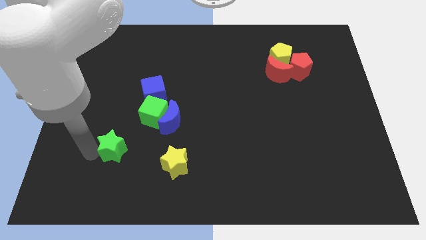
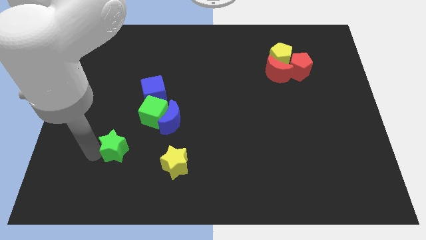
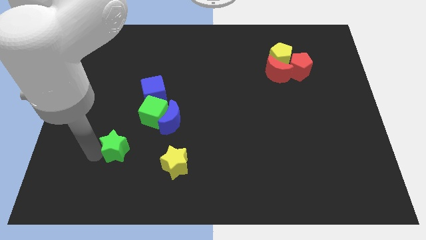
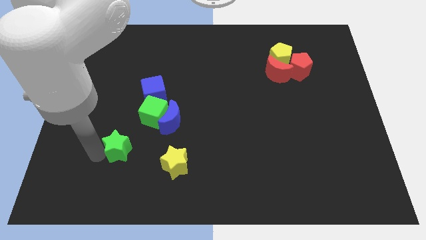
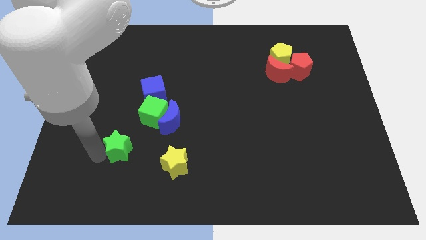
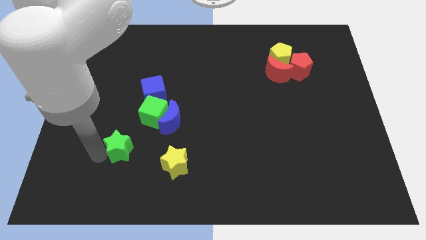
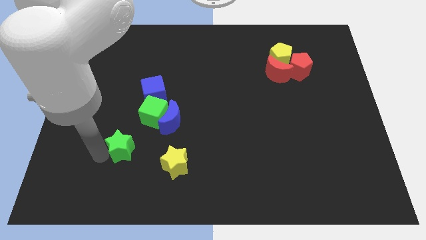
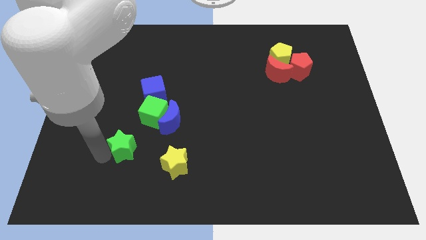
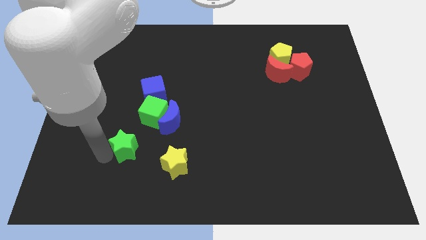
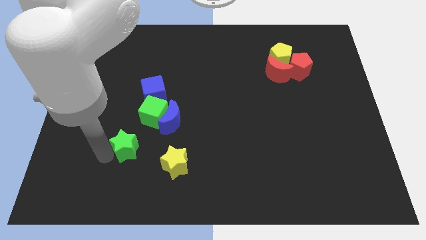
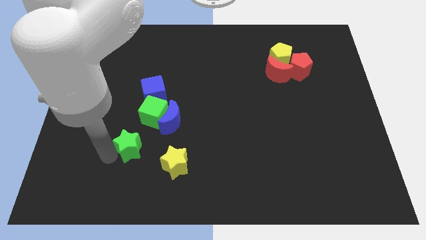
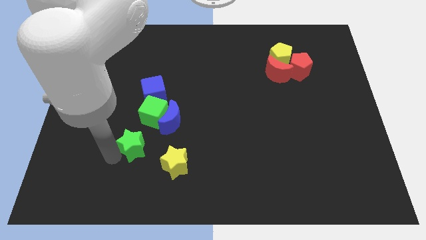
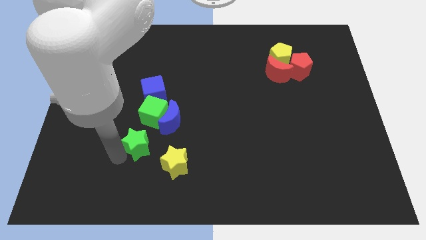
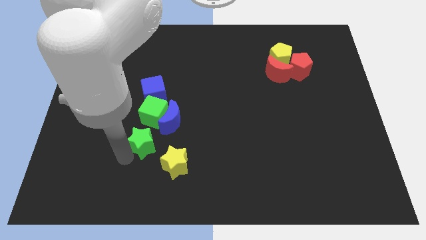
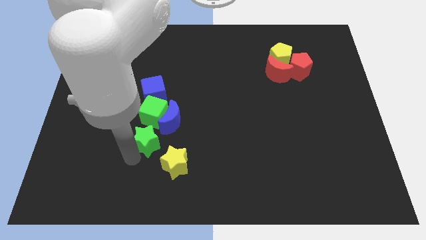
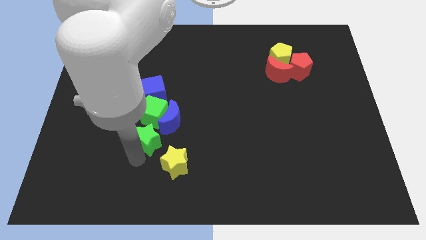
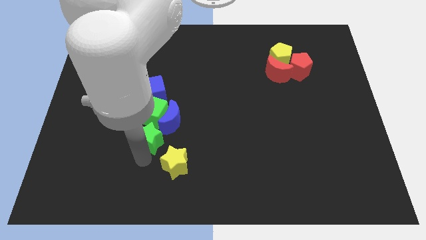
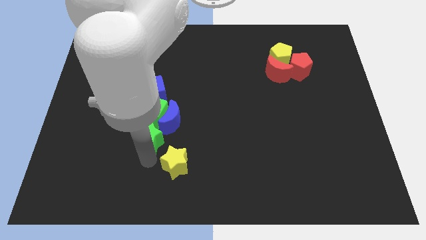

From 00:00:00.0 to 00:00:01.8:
push the green star towards the bottom of green cube

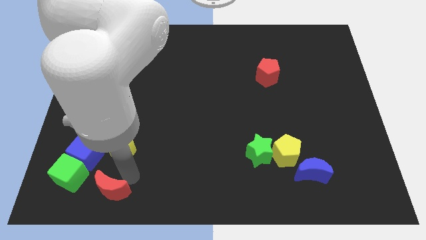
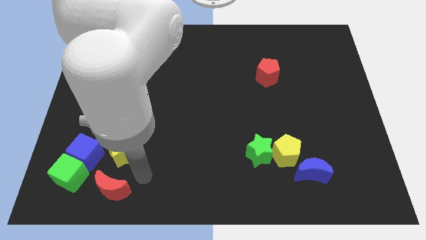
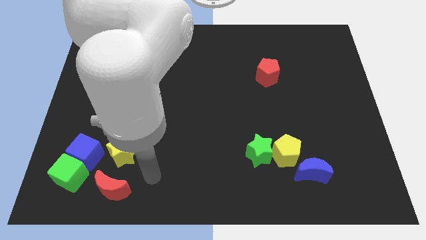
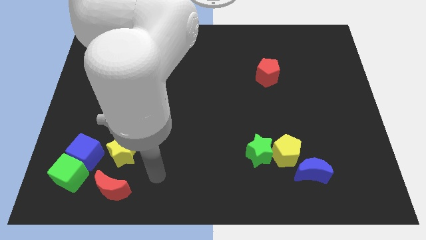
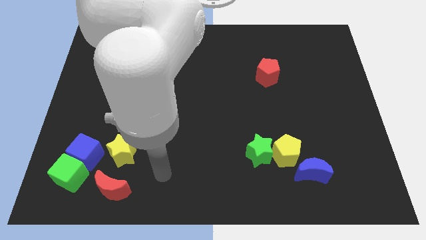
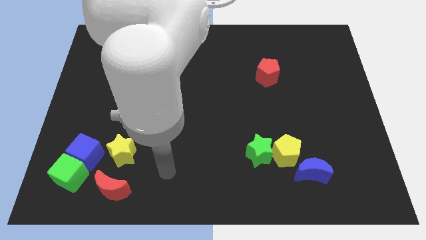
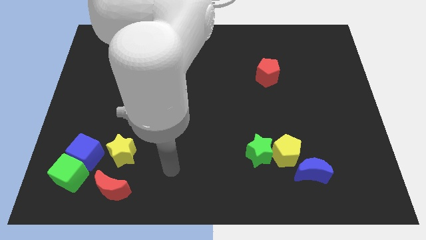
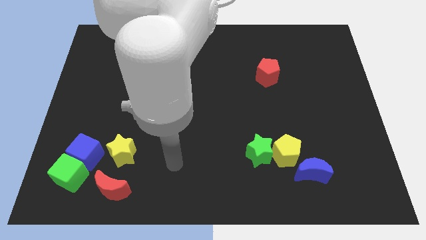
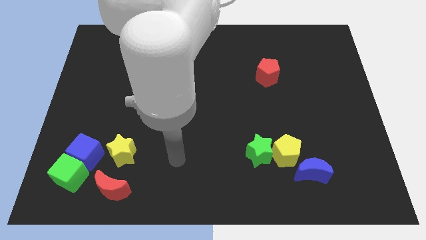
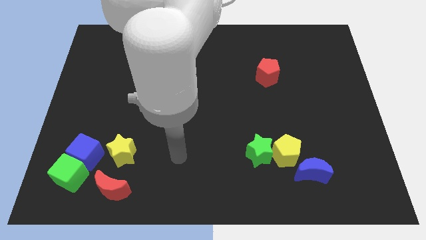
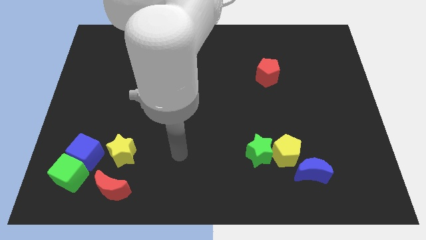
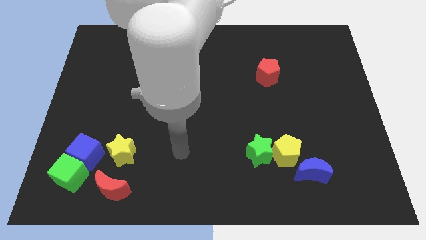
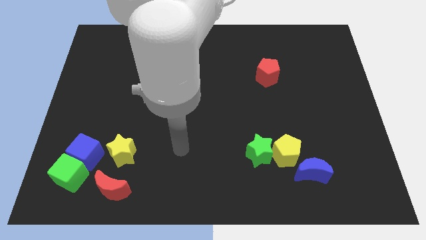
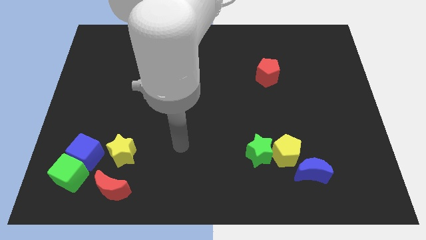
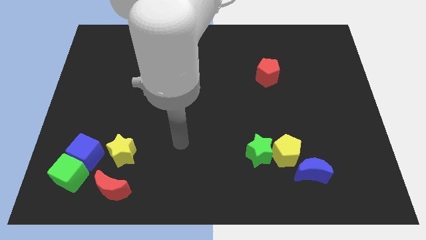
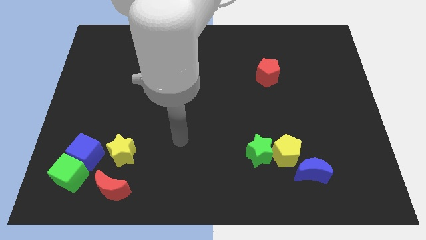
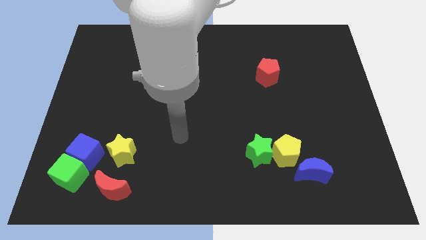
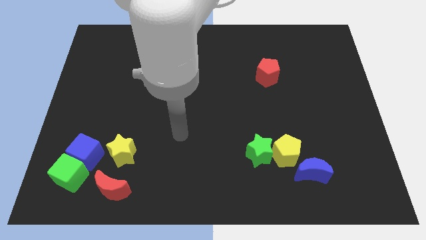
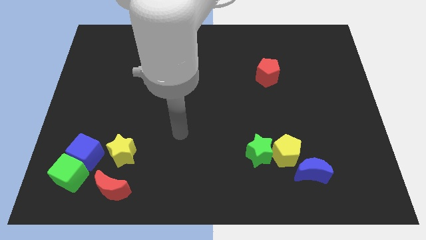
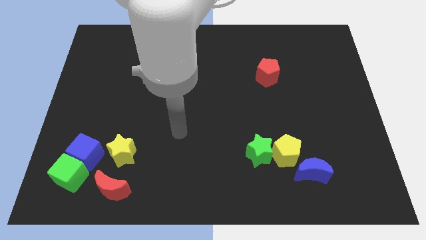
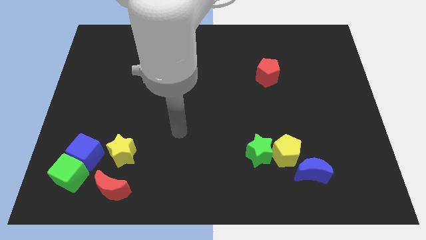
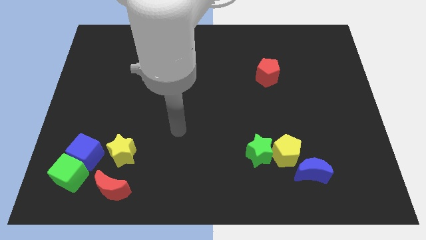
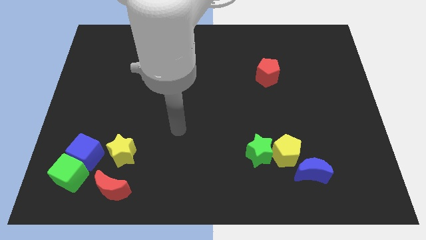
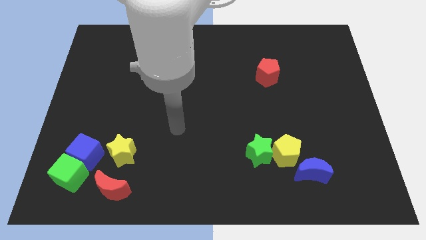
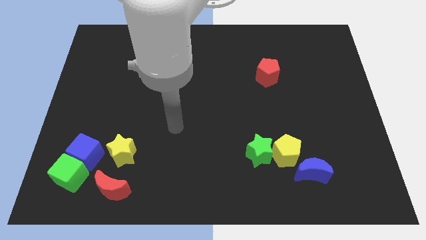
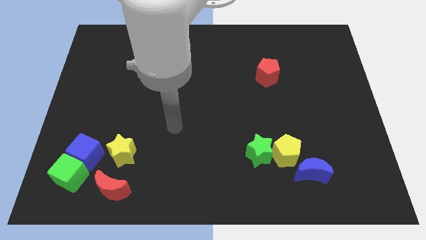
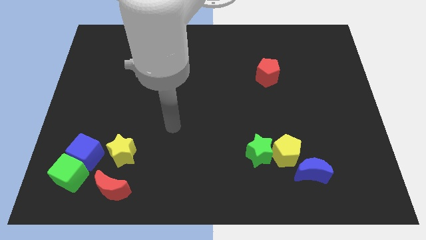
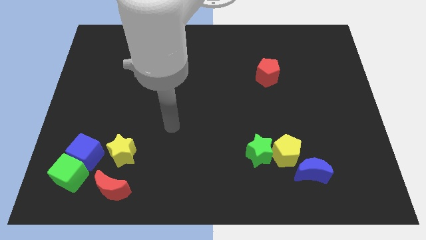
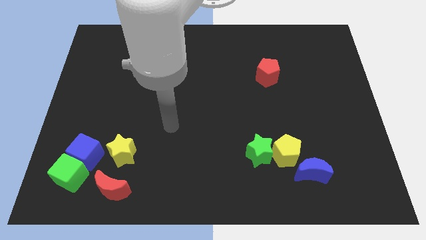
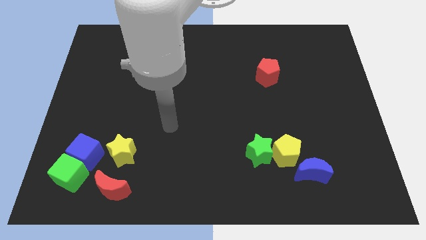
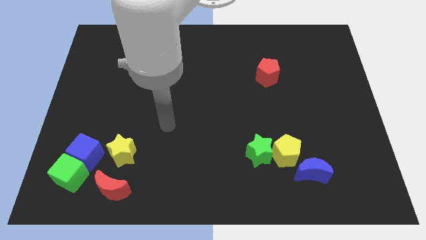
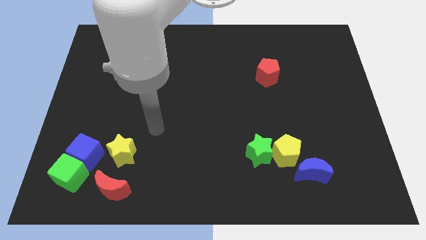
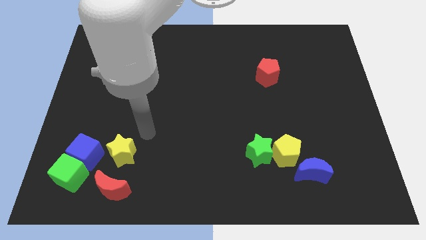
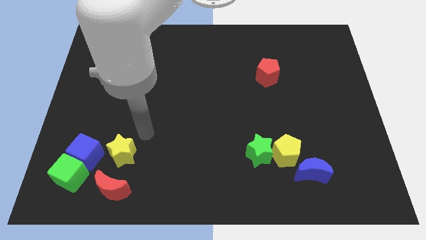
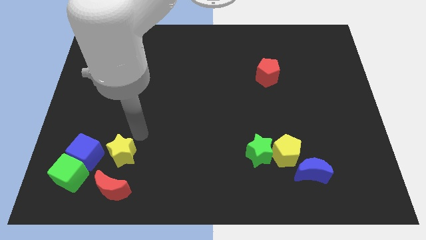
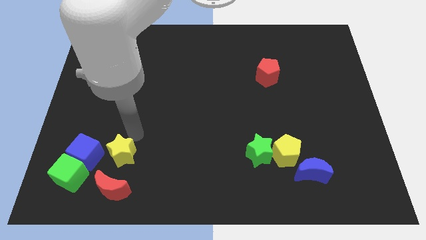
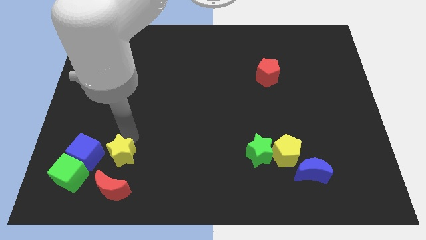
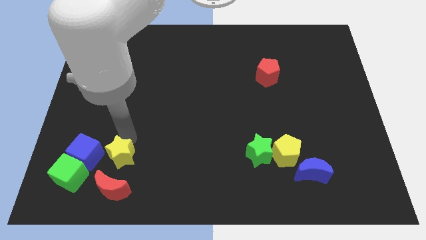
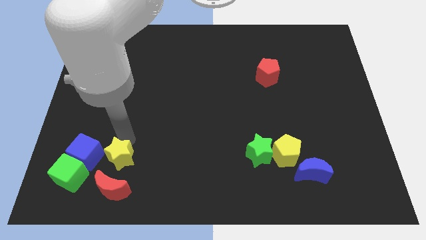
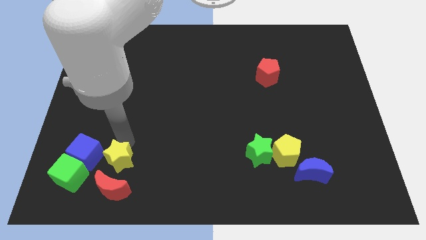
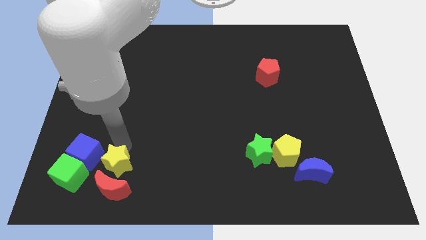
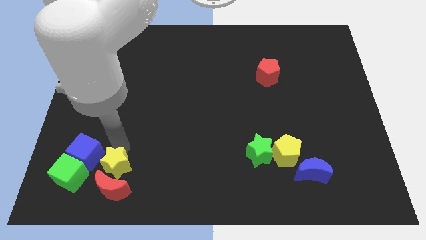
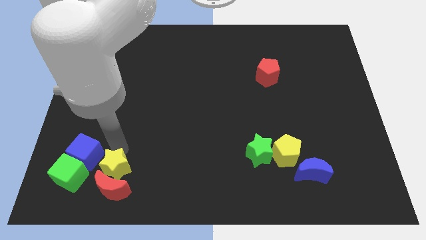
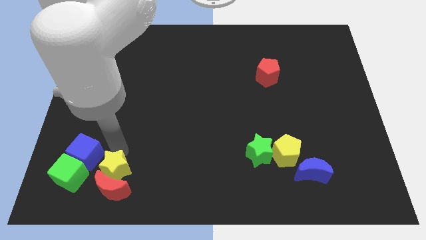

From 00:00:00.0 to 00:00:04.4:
push the yellow star into the red crescent

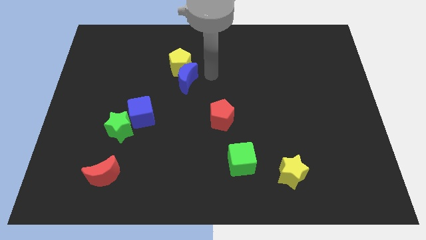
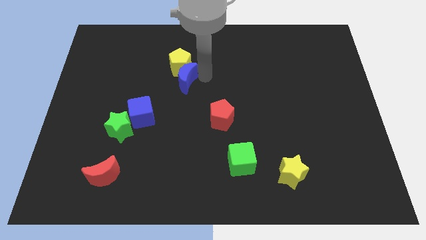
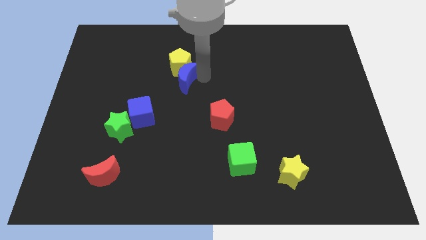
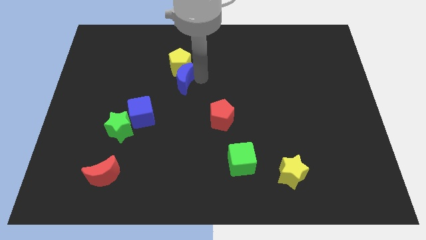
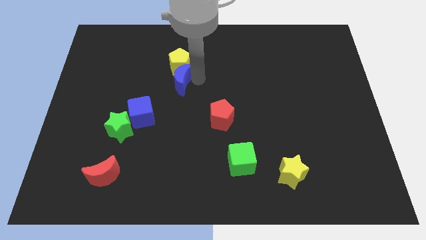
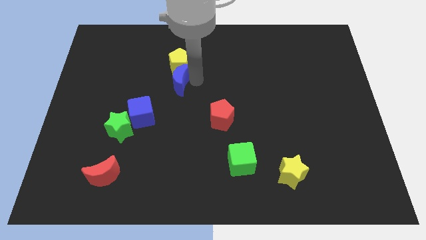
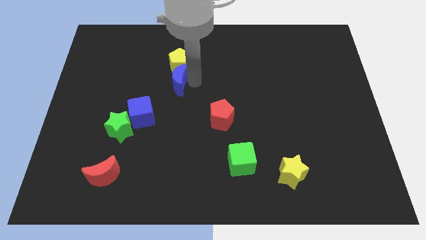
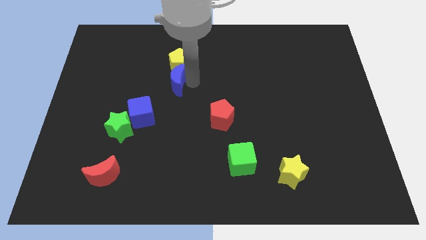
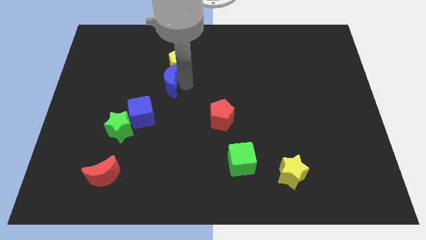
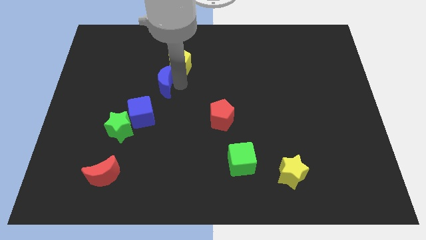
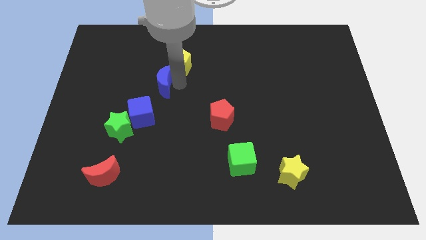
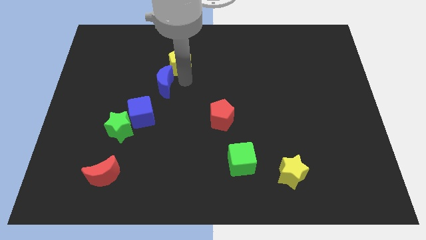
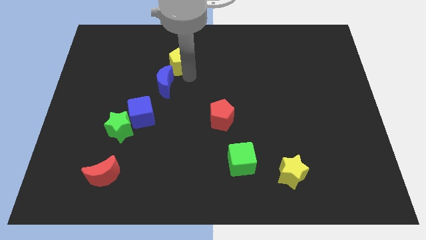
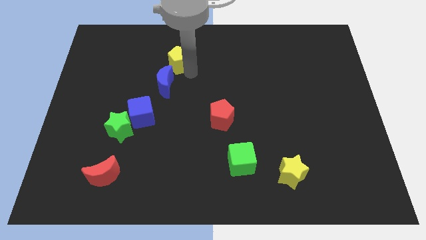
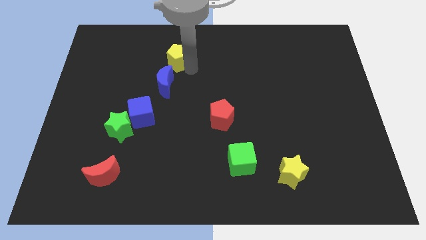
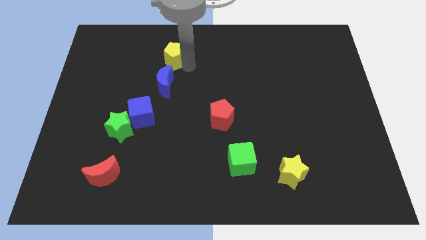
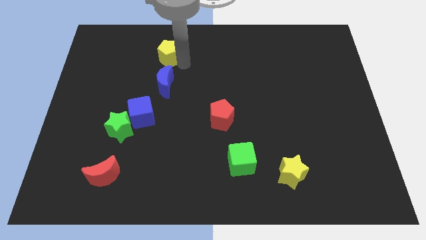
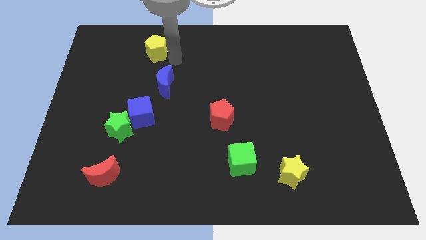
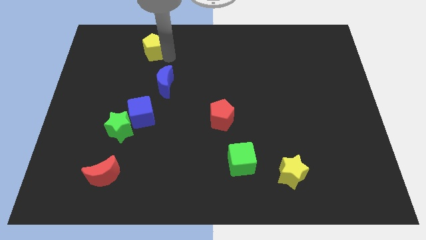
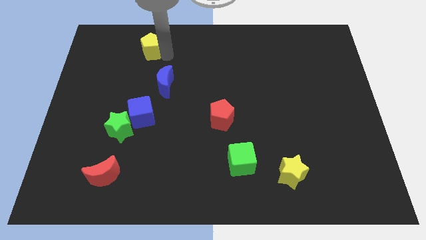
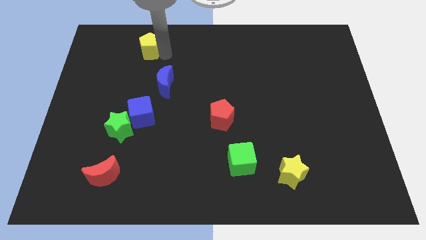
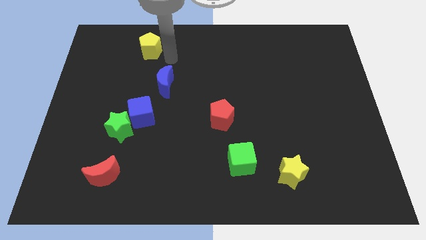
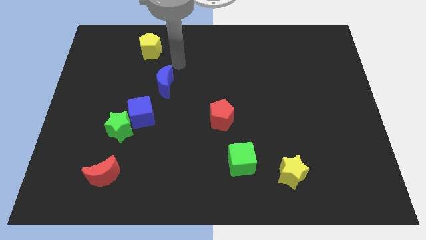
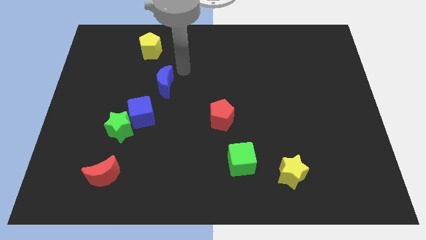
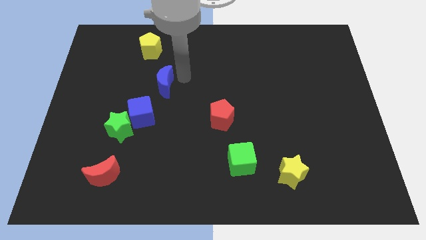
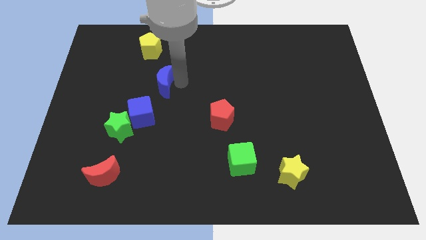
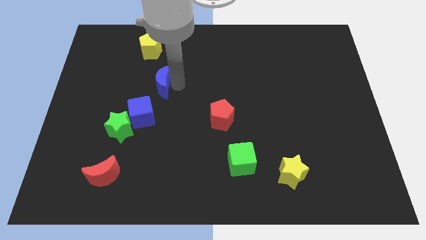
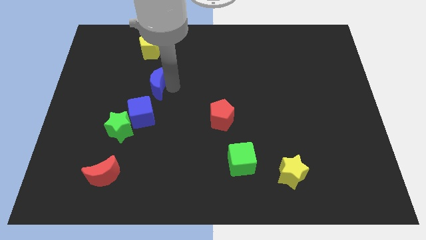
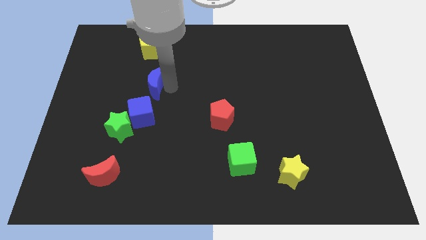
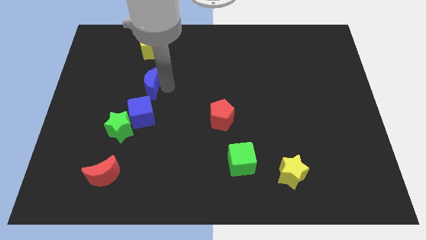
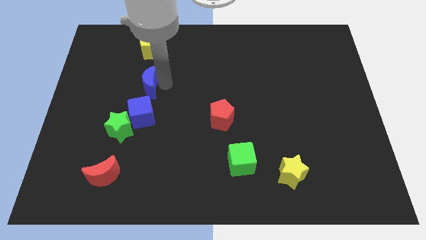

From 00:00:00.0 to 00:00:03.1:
move the yellow pentagon to the top
